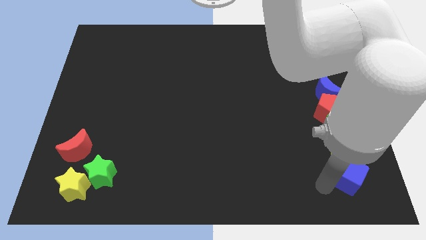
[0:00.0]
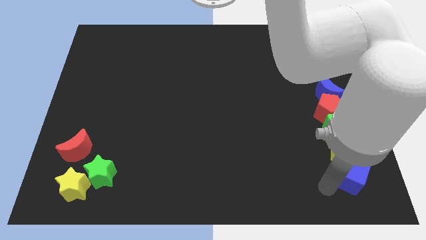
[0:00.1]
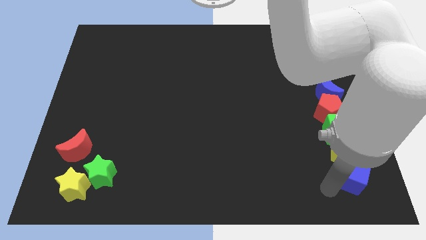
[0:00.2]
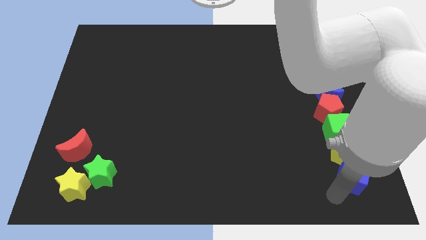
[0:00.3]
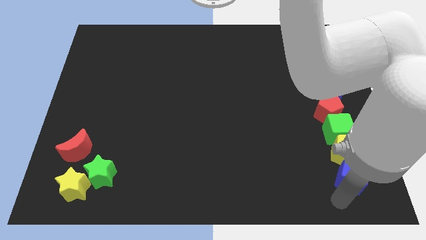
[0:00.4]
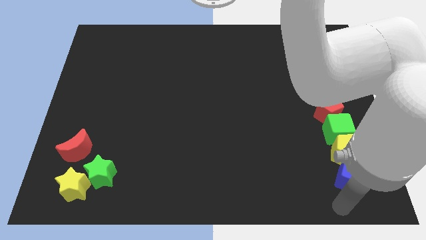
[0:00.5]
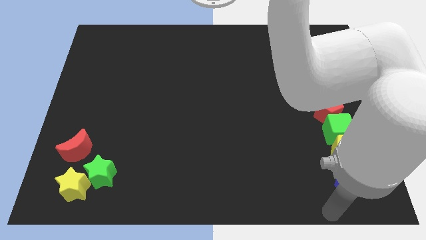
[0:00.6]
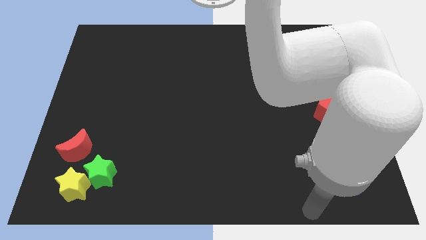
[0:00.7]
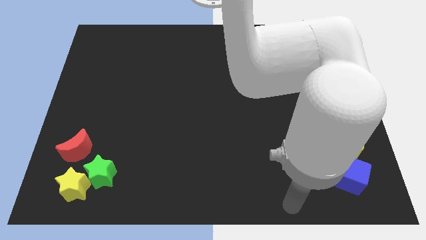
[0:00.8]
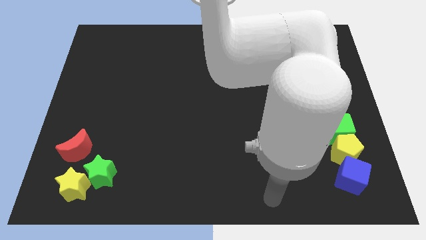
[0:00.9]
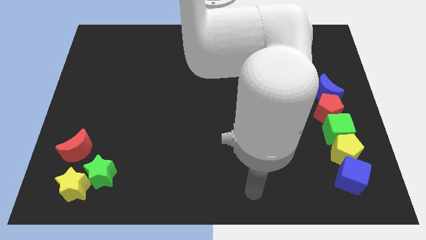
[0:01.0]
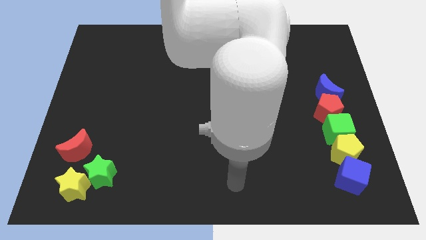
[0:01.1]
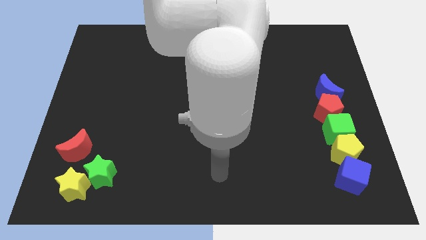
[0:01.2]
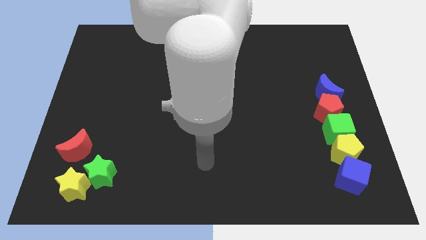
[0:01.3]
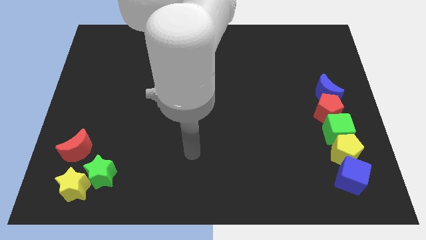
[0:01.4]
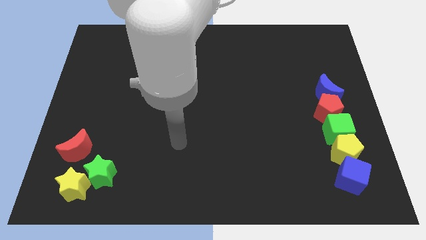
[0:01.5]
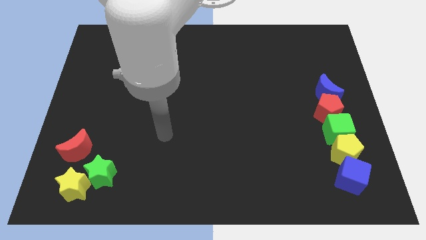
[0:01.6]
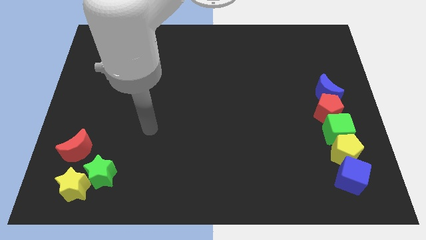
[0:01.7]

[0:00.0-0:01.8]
move the arm away from the blue cube

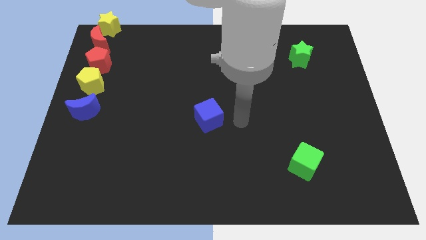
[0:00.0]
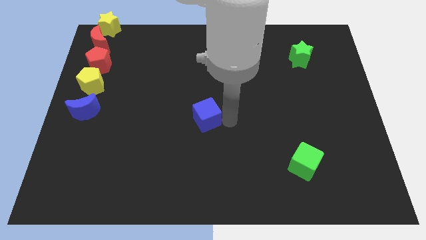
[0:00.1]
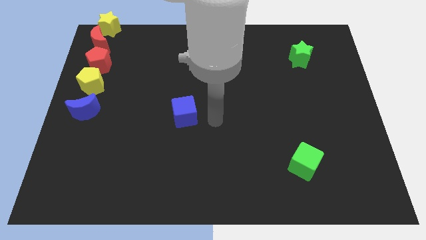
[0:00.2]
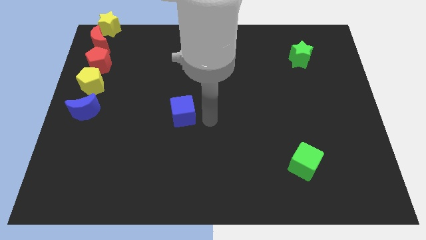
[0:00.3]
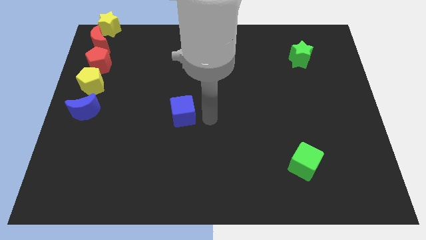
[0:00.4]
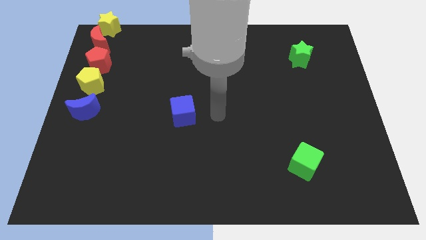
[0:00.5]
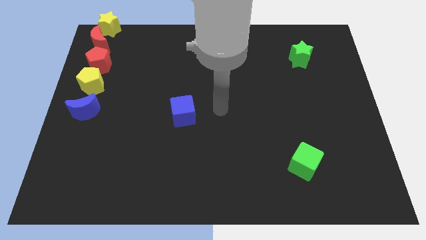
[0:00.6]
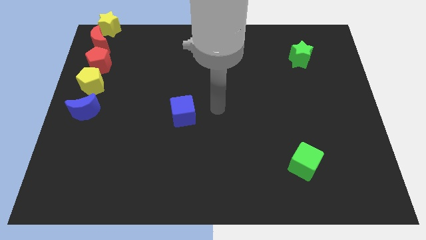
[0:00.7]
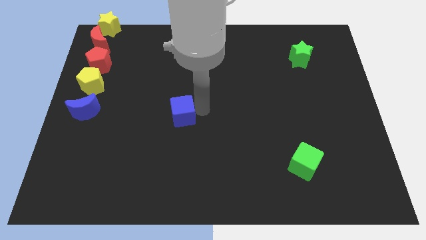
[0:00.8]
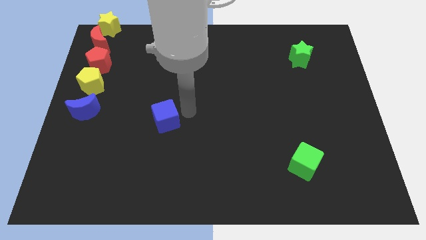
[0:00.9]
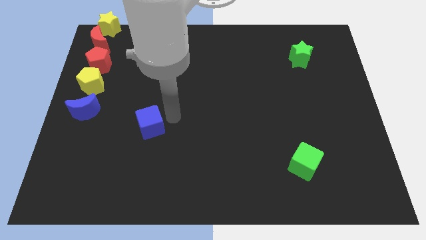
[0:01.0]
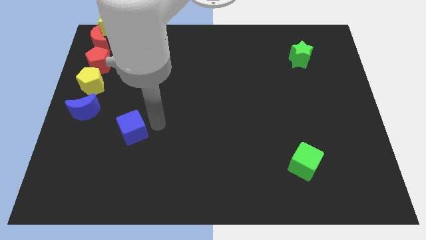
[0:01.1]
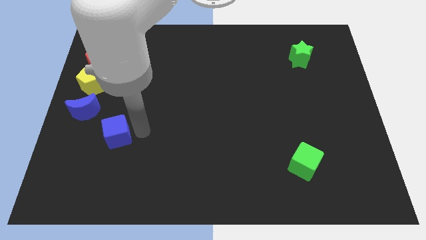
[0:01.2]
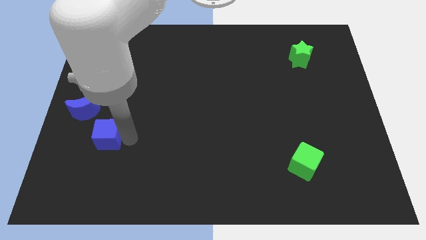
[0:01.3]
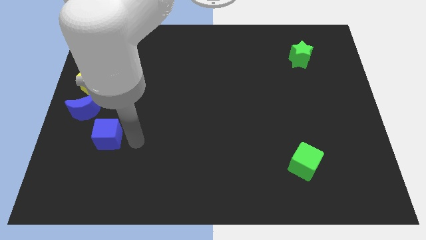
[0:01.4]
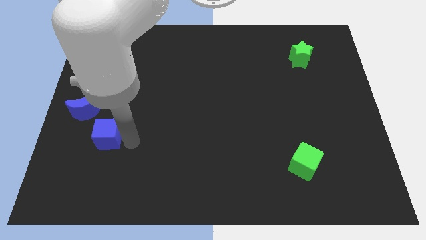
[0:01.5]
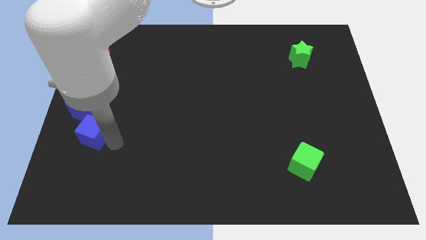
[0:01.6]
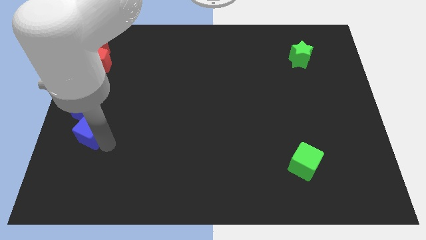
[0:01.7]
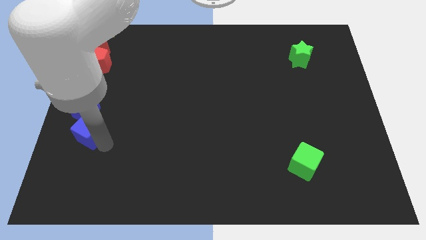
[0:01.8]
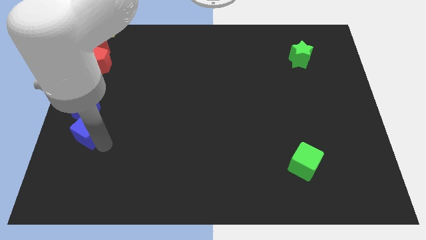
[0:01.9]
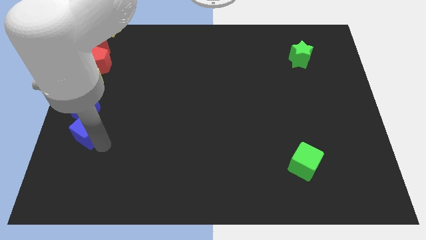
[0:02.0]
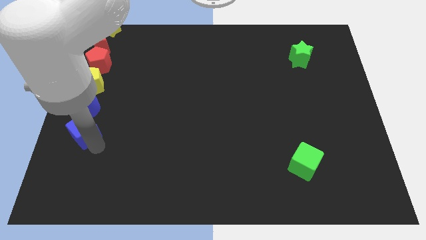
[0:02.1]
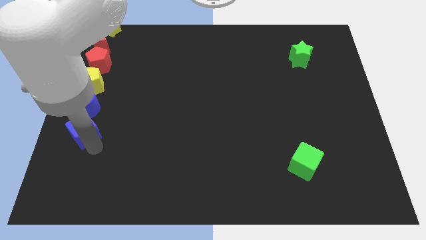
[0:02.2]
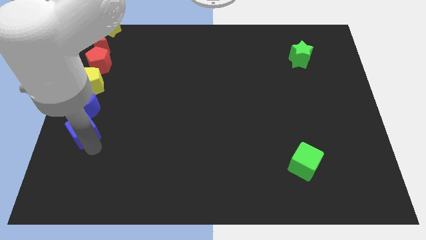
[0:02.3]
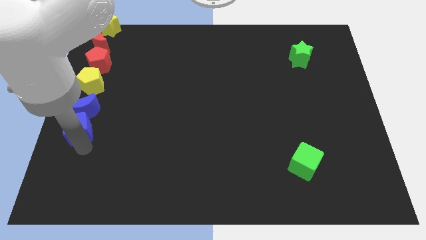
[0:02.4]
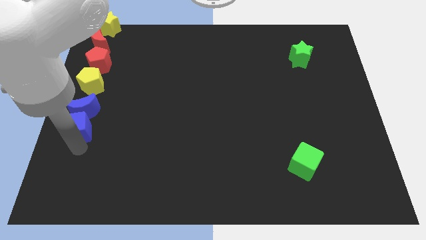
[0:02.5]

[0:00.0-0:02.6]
place blue cube below blue crescent

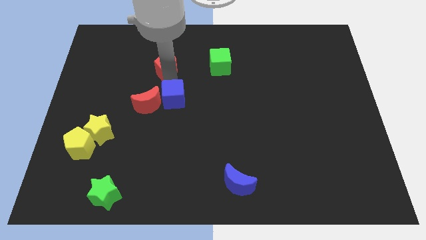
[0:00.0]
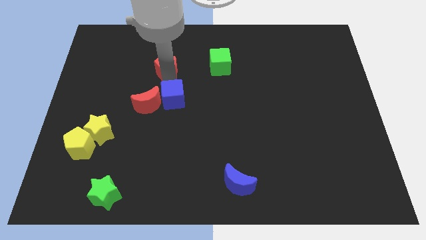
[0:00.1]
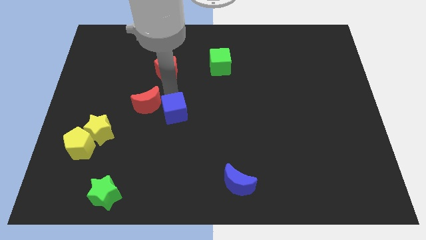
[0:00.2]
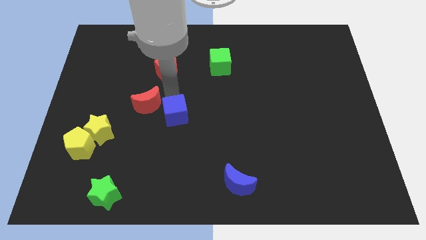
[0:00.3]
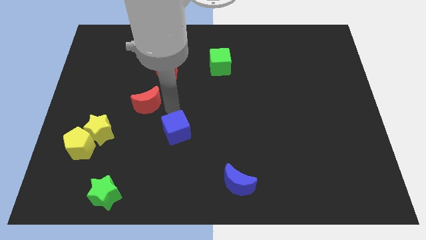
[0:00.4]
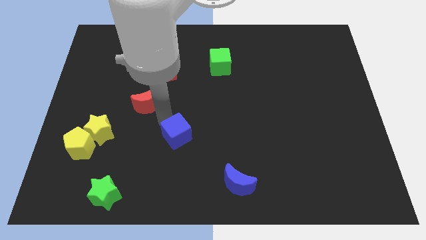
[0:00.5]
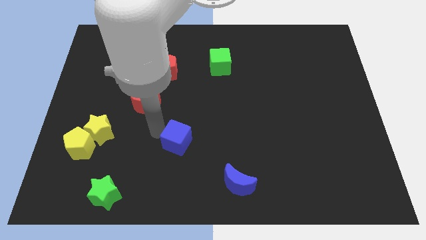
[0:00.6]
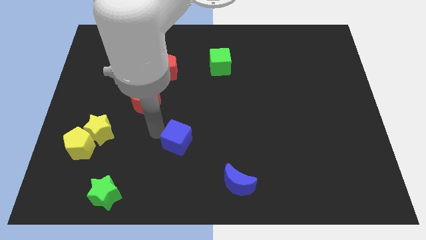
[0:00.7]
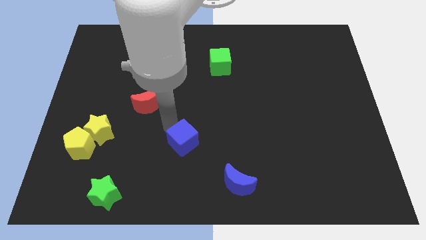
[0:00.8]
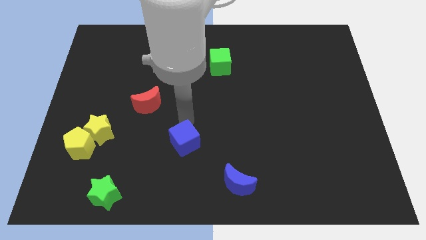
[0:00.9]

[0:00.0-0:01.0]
place blue cube in between red moon and blue moon

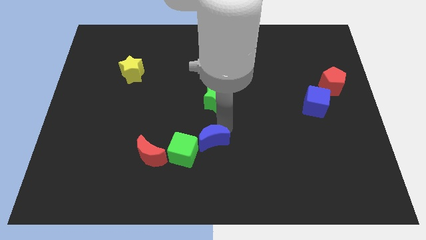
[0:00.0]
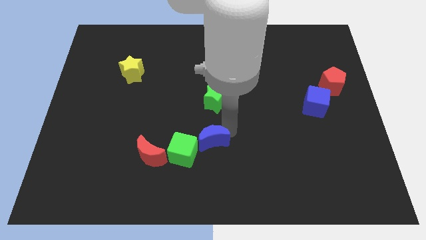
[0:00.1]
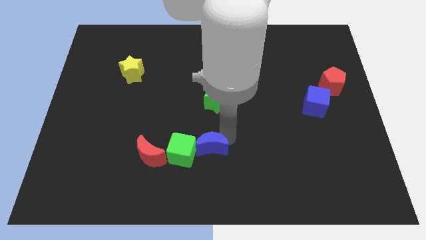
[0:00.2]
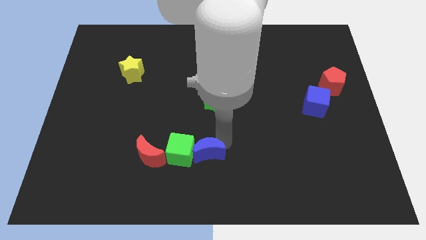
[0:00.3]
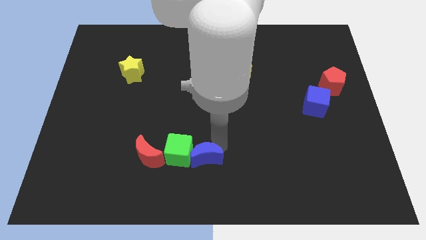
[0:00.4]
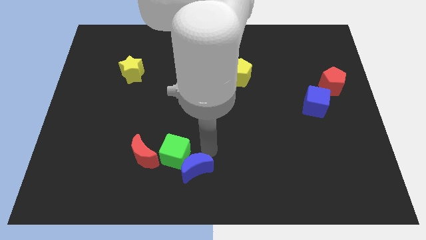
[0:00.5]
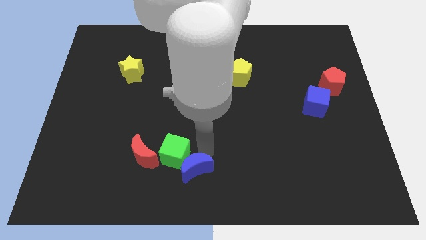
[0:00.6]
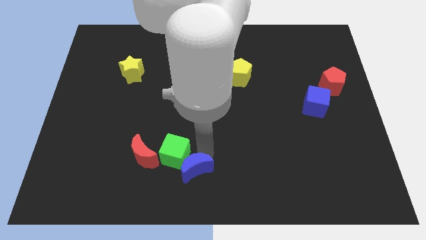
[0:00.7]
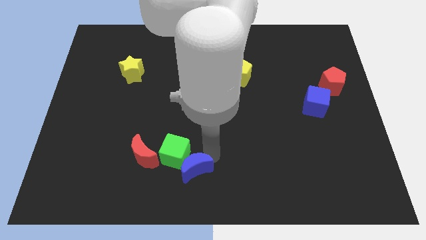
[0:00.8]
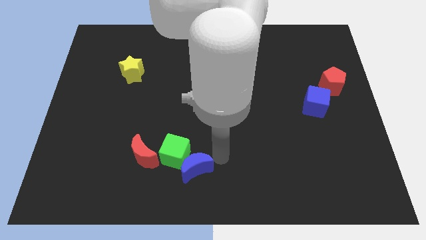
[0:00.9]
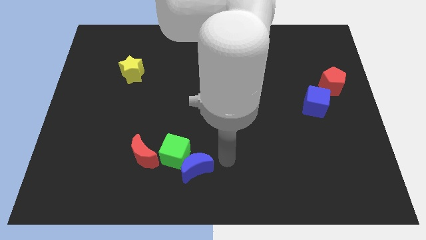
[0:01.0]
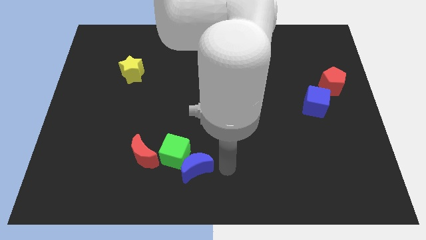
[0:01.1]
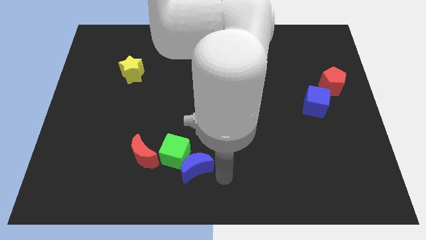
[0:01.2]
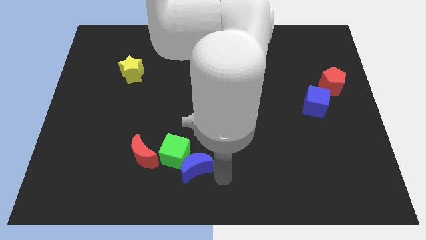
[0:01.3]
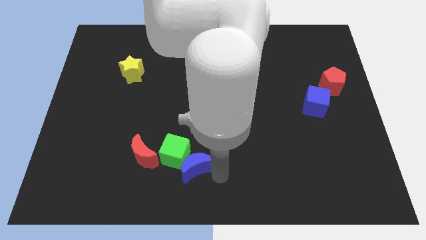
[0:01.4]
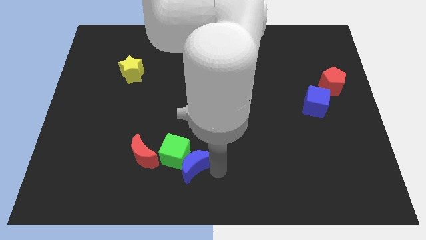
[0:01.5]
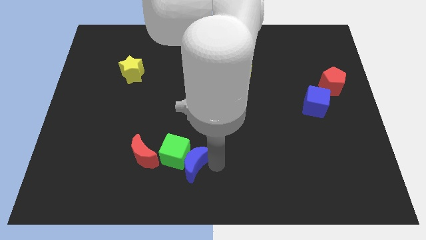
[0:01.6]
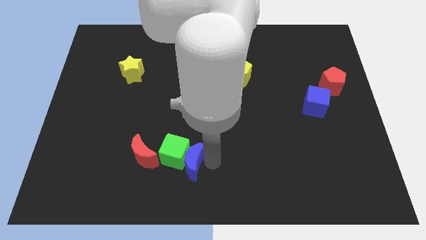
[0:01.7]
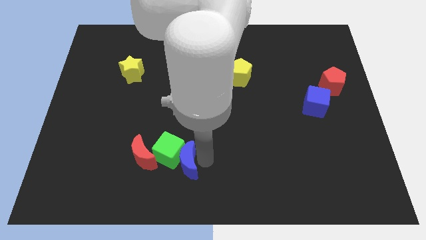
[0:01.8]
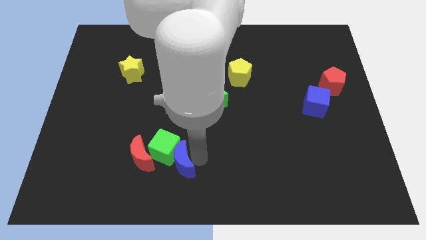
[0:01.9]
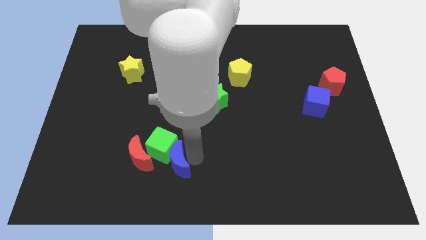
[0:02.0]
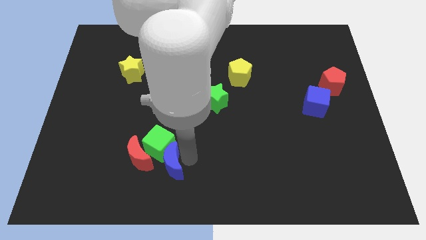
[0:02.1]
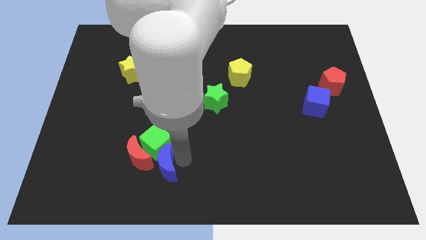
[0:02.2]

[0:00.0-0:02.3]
push the blue crescent into the green cube

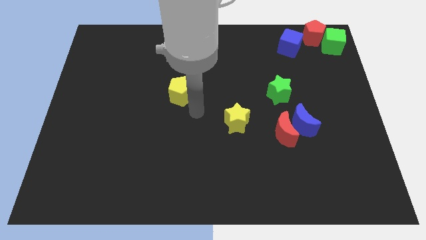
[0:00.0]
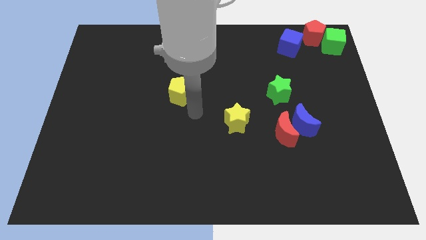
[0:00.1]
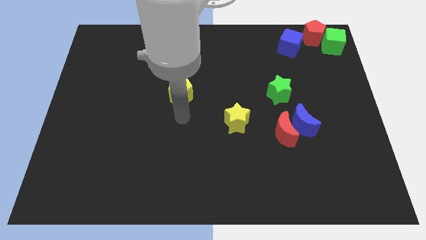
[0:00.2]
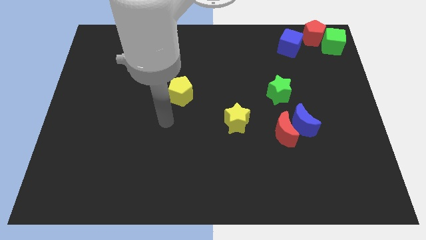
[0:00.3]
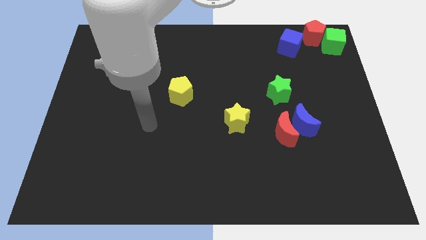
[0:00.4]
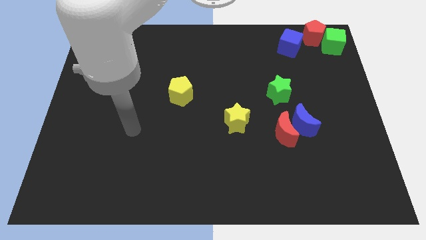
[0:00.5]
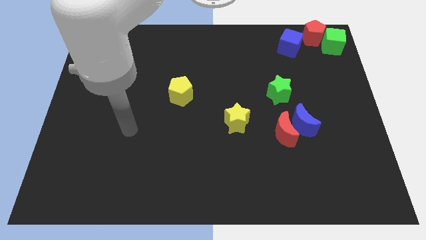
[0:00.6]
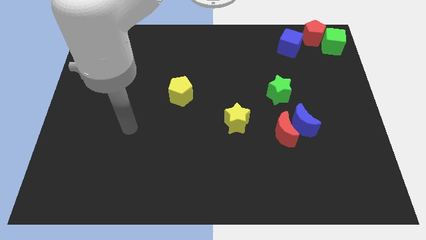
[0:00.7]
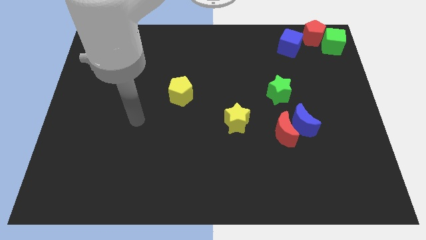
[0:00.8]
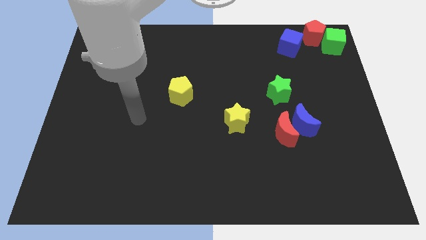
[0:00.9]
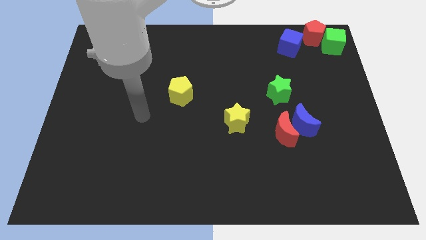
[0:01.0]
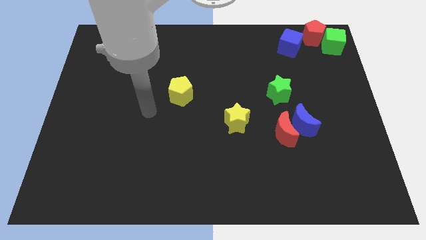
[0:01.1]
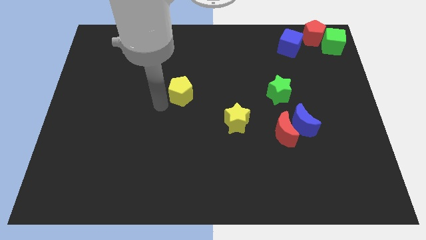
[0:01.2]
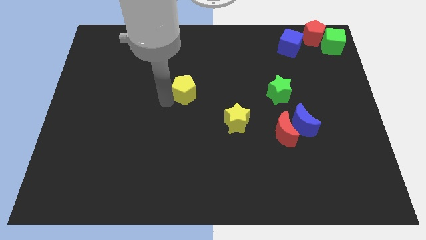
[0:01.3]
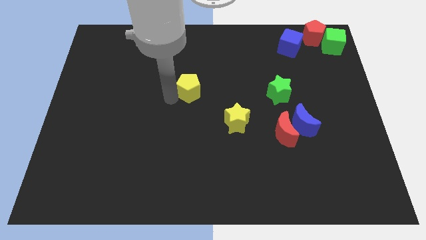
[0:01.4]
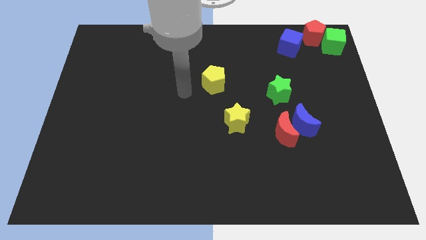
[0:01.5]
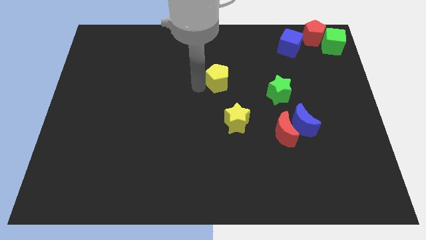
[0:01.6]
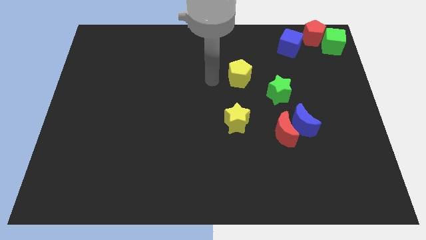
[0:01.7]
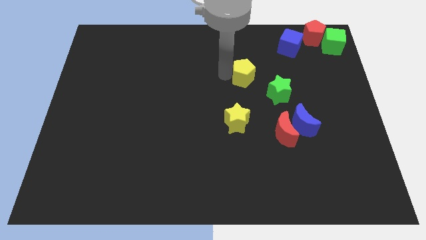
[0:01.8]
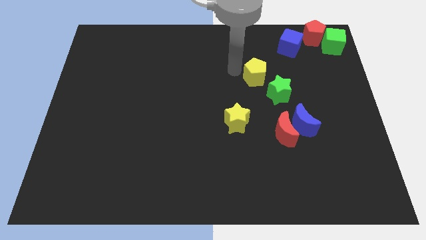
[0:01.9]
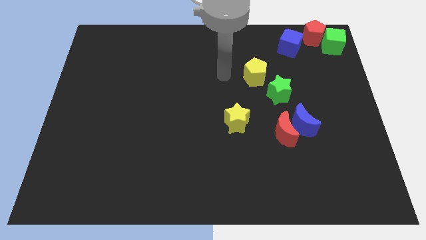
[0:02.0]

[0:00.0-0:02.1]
slide yellow pentagon to the top left of green star
